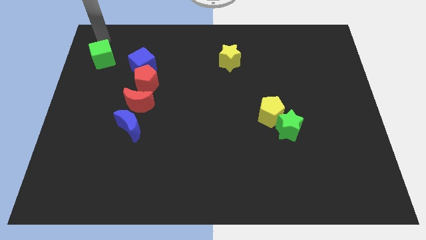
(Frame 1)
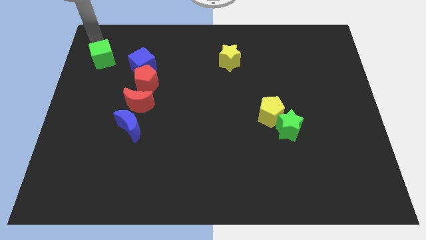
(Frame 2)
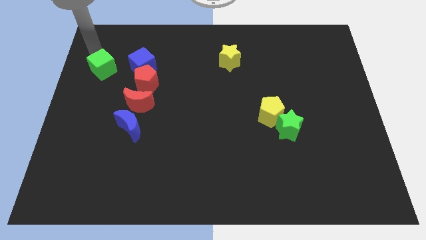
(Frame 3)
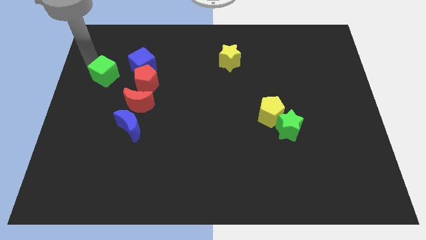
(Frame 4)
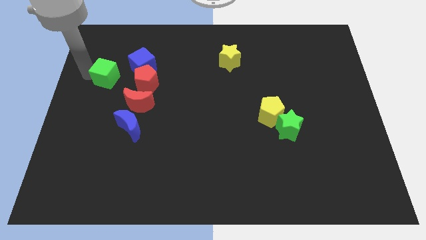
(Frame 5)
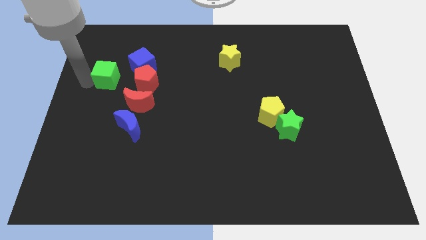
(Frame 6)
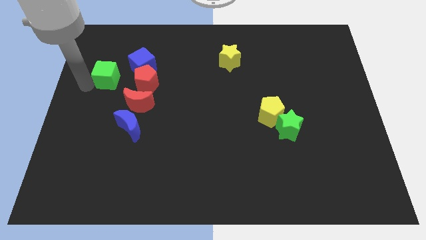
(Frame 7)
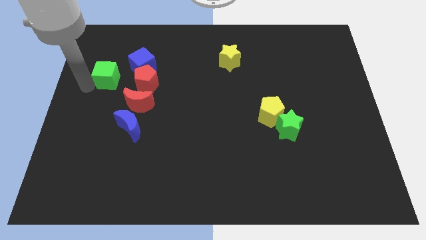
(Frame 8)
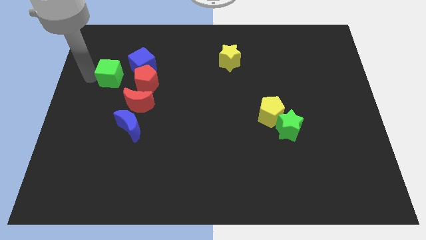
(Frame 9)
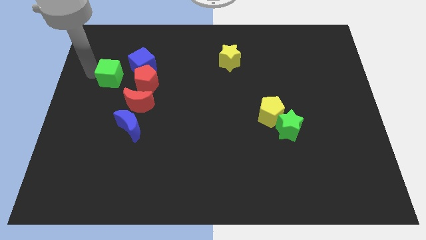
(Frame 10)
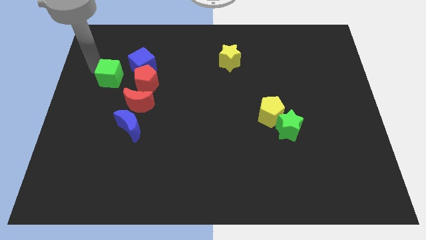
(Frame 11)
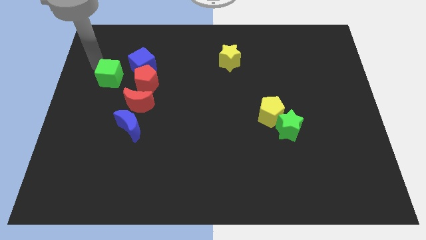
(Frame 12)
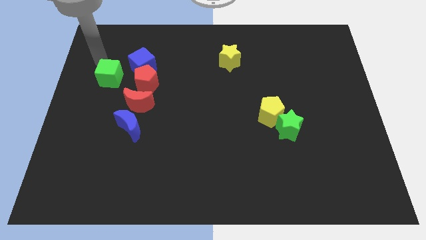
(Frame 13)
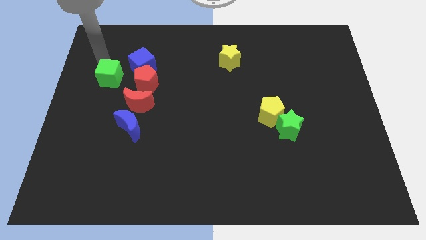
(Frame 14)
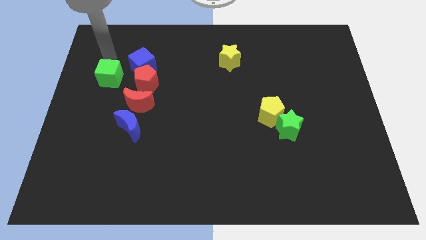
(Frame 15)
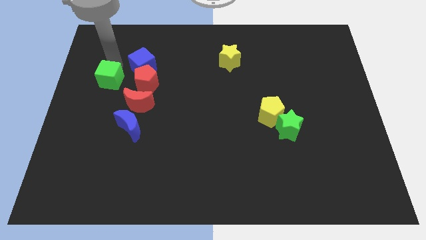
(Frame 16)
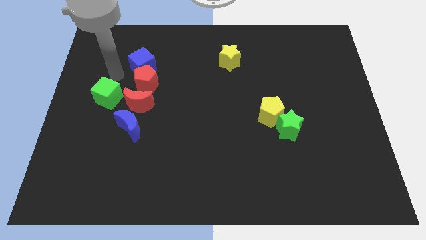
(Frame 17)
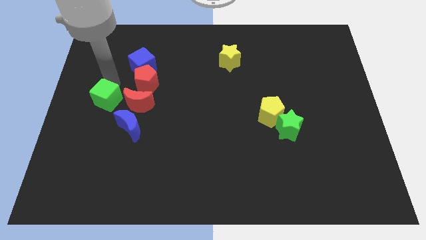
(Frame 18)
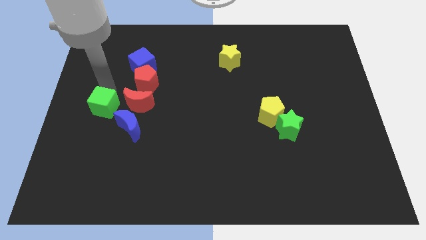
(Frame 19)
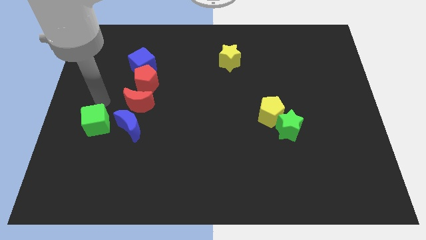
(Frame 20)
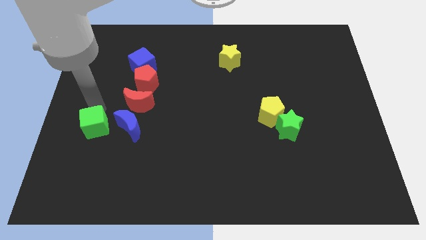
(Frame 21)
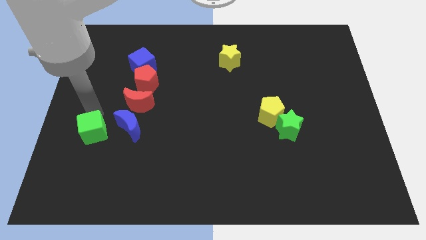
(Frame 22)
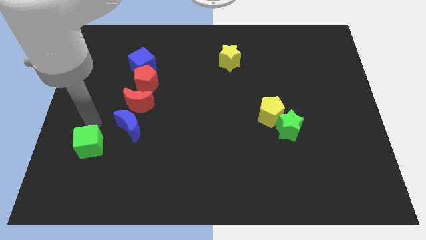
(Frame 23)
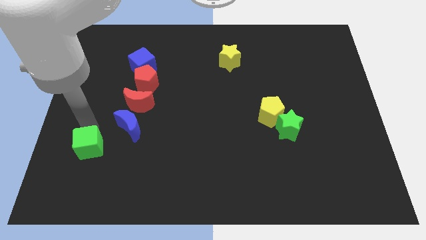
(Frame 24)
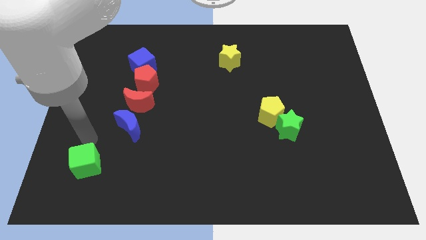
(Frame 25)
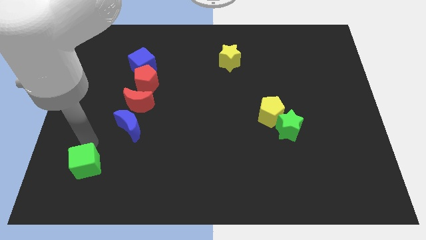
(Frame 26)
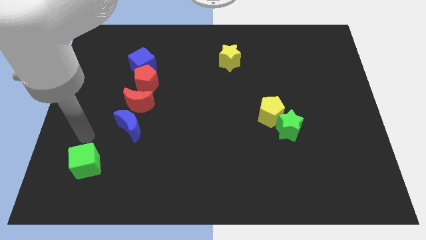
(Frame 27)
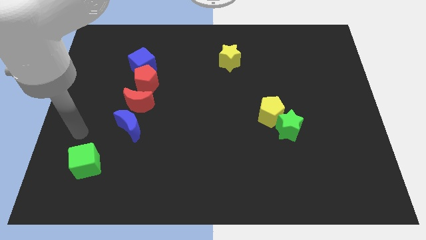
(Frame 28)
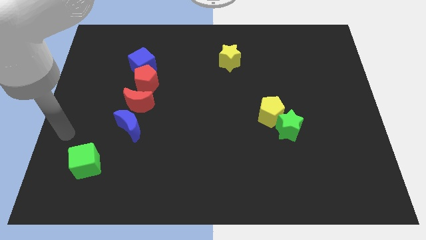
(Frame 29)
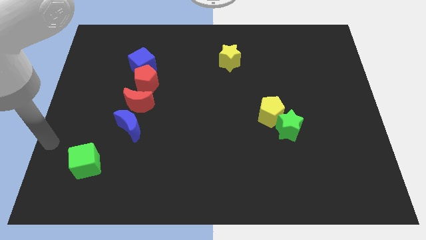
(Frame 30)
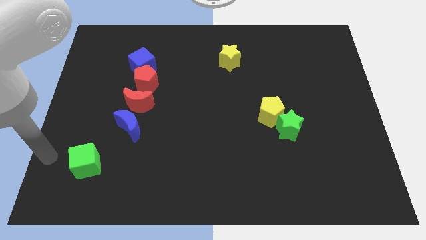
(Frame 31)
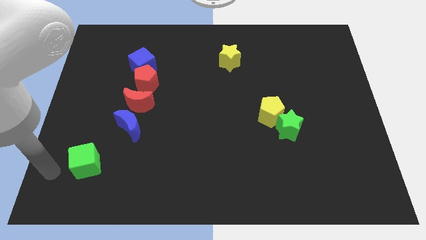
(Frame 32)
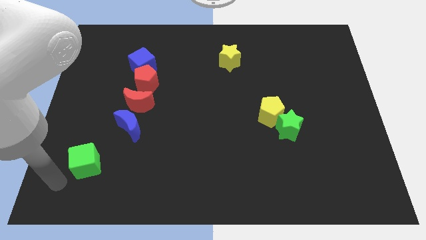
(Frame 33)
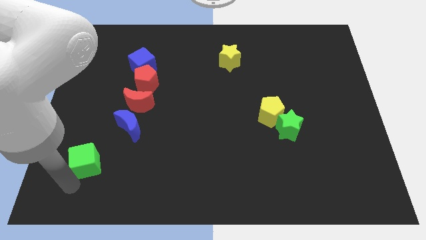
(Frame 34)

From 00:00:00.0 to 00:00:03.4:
move the green cube slightly downwards

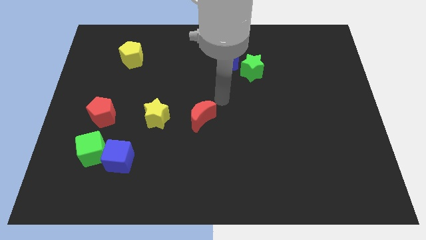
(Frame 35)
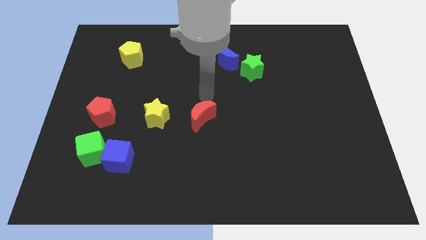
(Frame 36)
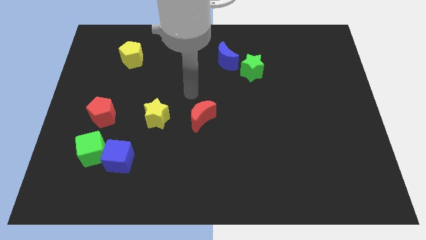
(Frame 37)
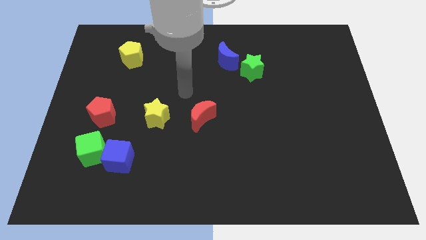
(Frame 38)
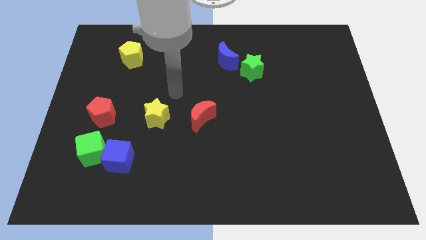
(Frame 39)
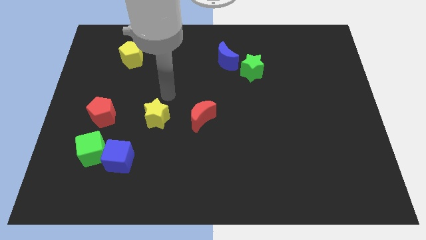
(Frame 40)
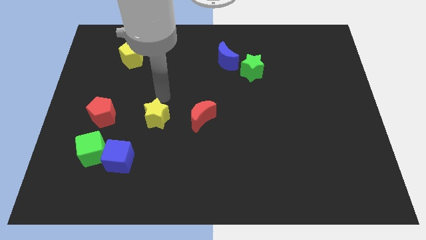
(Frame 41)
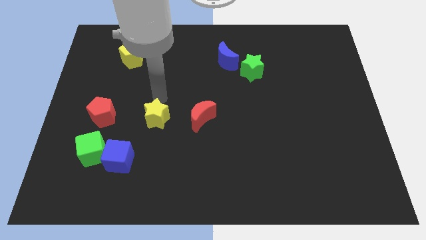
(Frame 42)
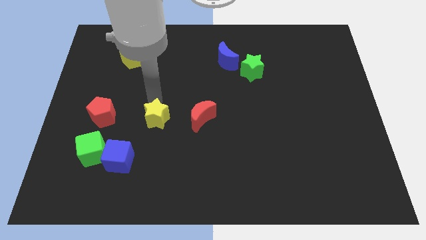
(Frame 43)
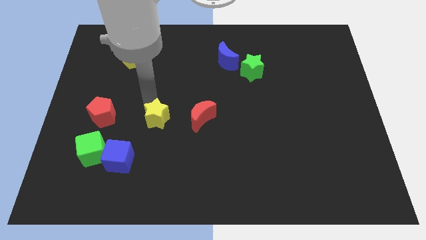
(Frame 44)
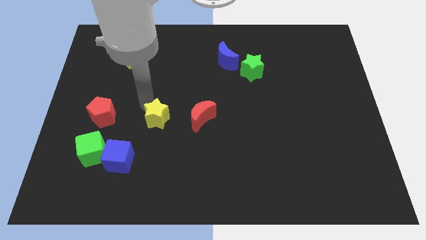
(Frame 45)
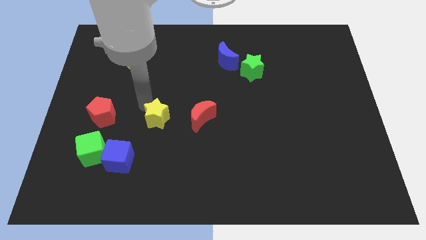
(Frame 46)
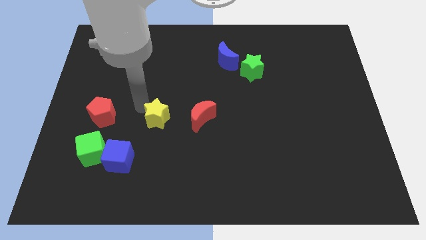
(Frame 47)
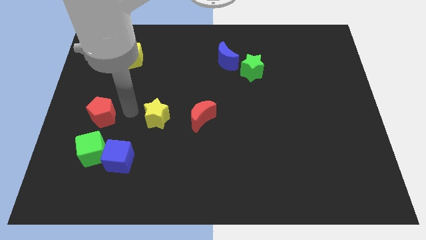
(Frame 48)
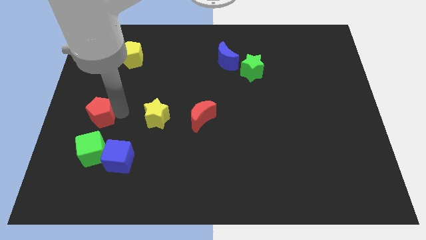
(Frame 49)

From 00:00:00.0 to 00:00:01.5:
place the arm right to the red pentagon

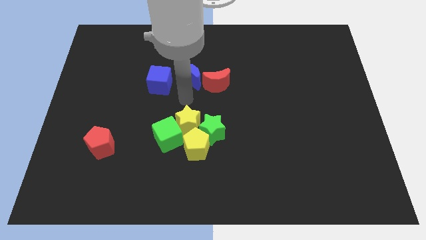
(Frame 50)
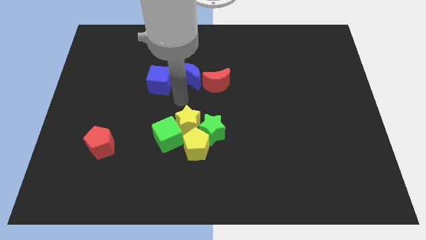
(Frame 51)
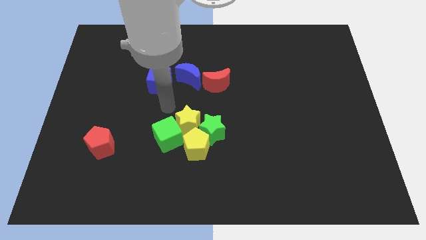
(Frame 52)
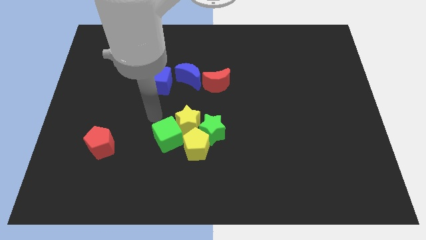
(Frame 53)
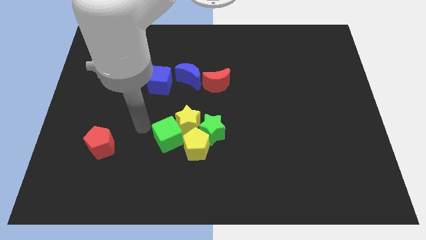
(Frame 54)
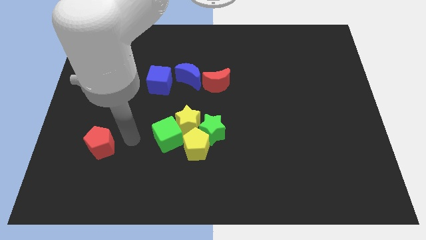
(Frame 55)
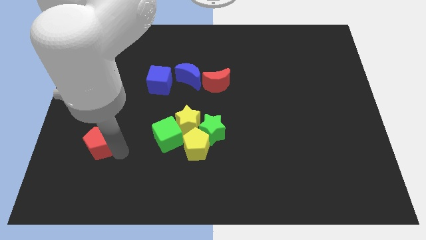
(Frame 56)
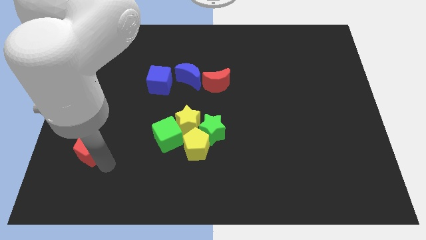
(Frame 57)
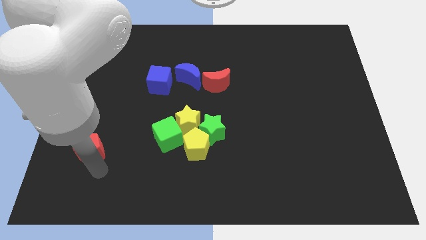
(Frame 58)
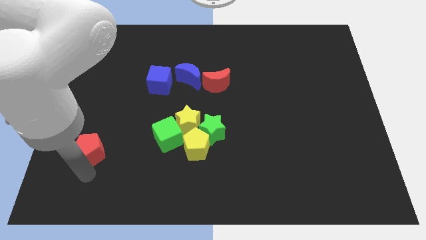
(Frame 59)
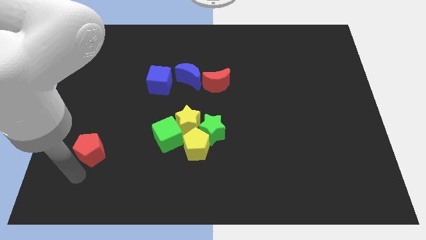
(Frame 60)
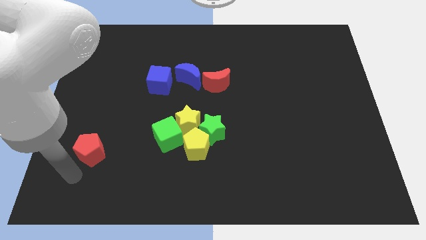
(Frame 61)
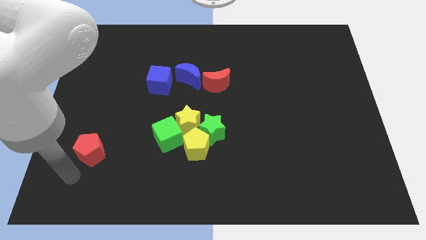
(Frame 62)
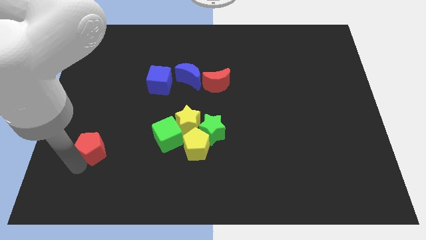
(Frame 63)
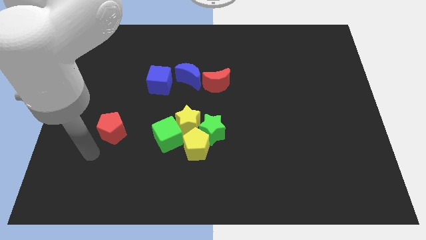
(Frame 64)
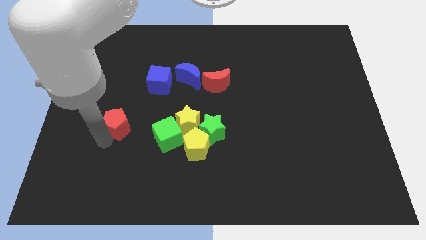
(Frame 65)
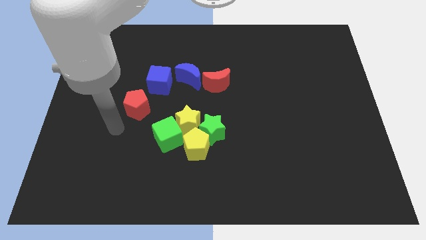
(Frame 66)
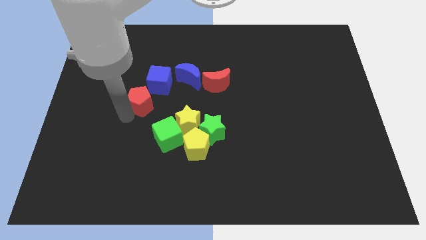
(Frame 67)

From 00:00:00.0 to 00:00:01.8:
push red pentagon to the bottom left of blue cube

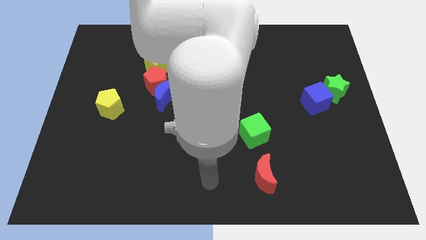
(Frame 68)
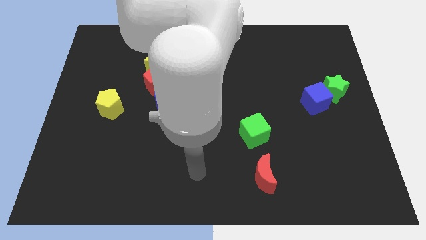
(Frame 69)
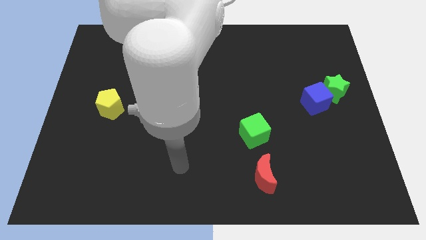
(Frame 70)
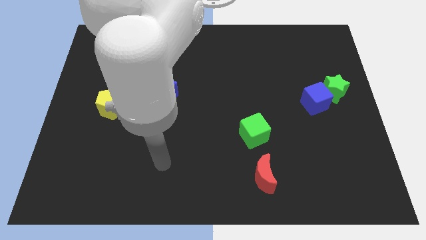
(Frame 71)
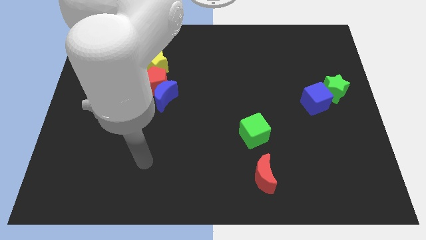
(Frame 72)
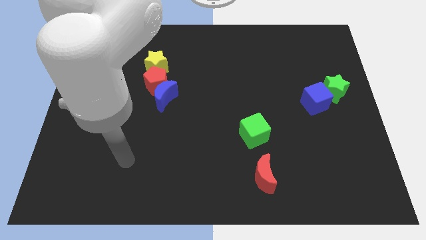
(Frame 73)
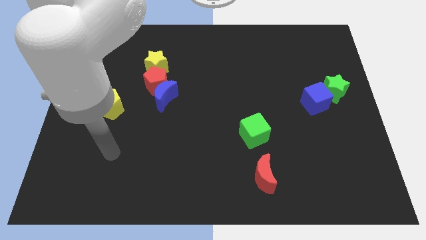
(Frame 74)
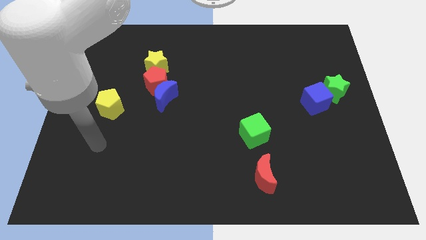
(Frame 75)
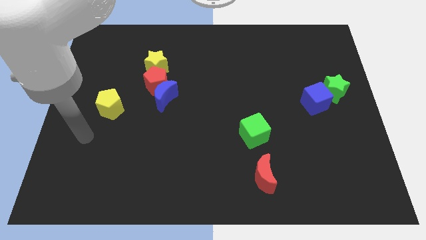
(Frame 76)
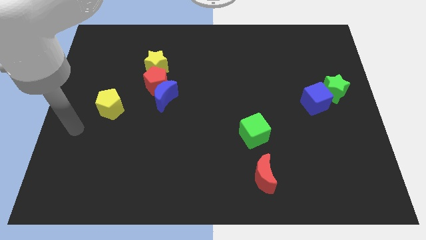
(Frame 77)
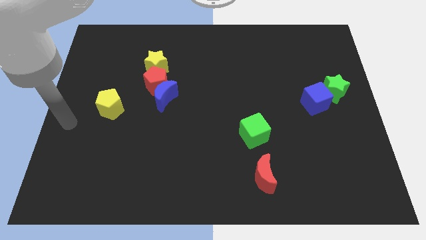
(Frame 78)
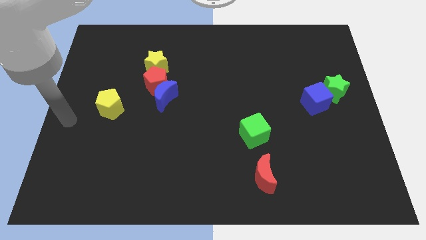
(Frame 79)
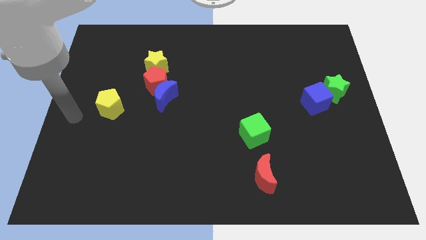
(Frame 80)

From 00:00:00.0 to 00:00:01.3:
point your hand at the center left of the board

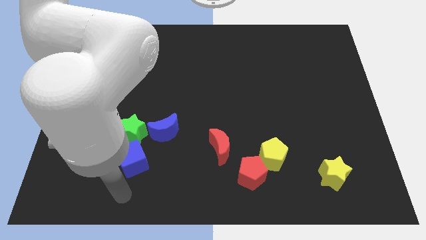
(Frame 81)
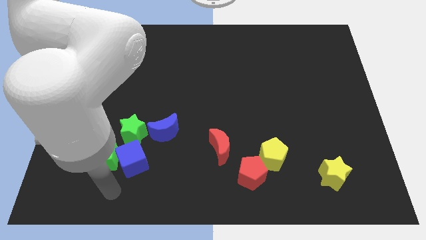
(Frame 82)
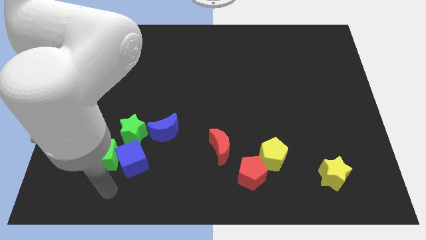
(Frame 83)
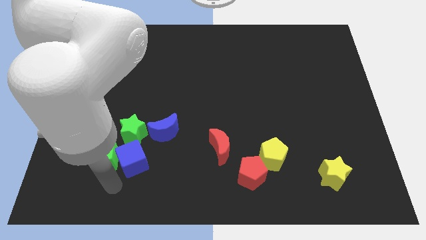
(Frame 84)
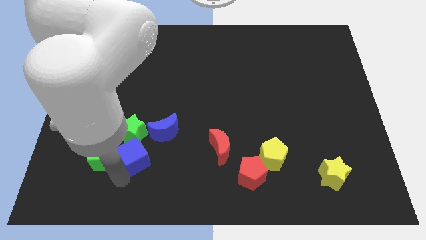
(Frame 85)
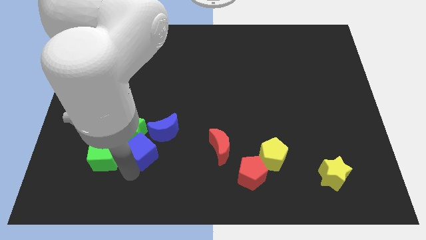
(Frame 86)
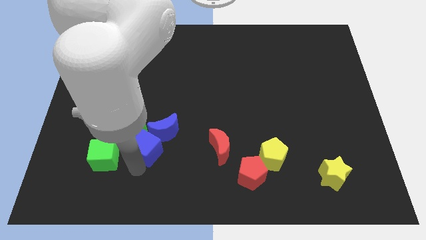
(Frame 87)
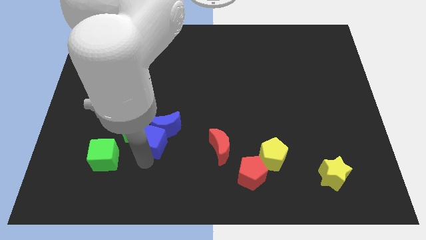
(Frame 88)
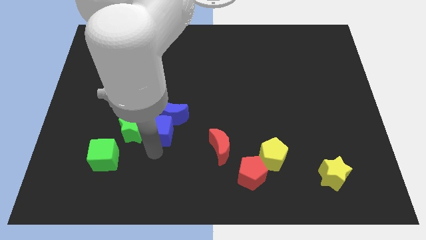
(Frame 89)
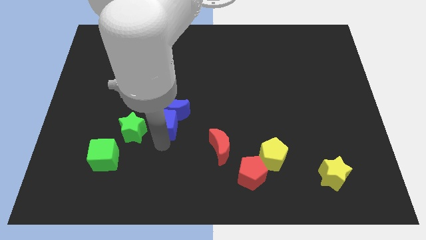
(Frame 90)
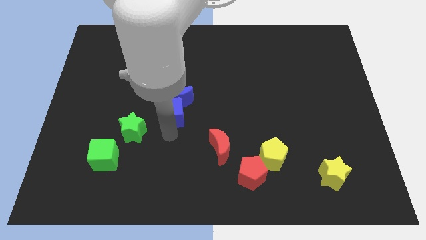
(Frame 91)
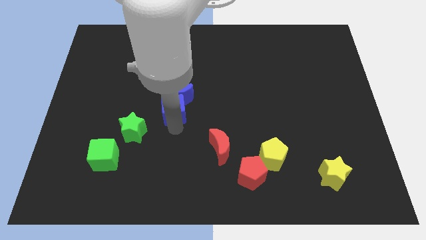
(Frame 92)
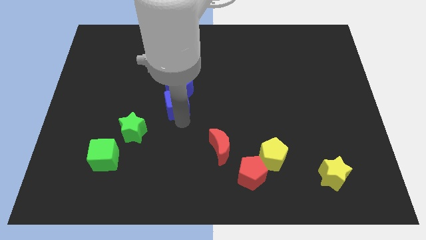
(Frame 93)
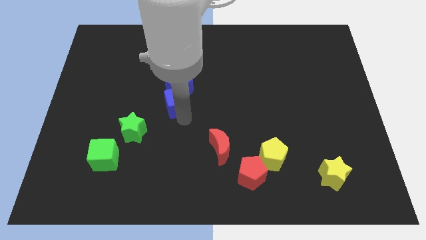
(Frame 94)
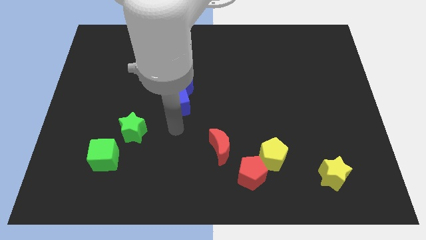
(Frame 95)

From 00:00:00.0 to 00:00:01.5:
move the blue cube along with the blue crescent towards the top
